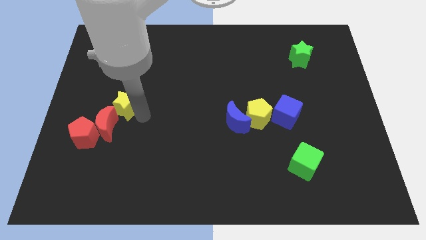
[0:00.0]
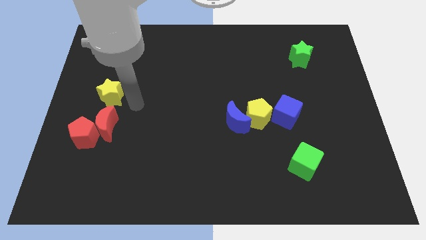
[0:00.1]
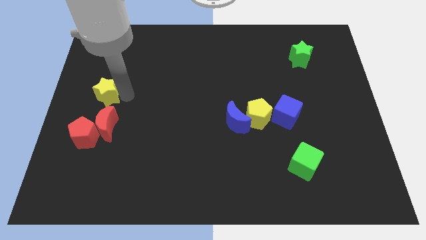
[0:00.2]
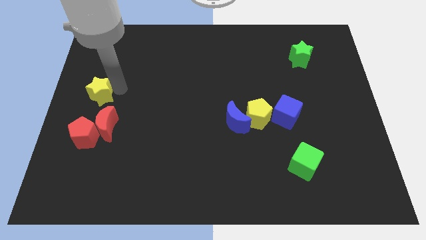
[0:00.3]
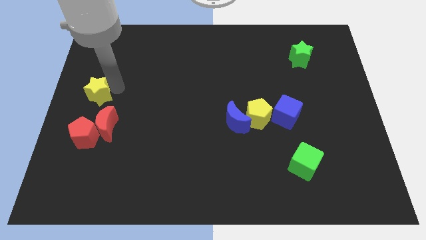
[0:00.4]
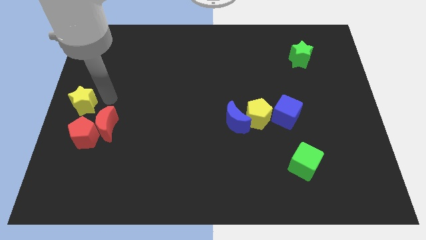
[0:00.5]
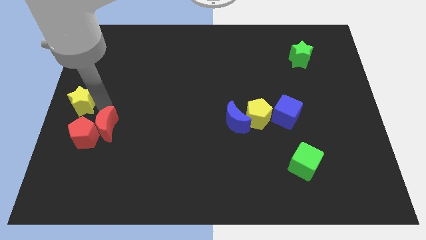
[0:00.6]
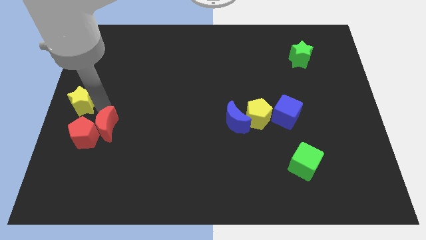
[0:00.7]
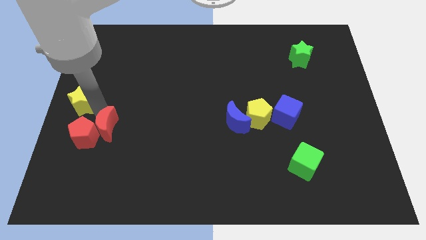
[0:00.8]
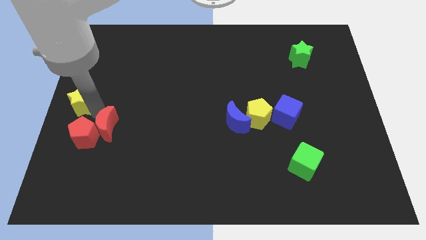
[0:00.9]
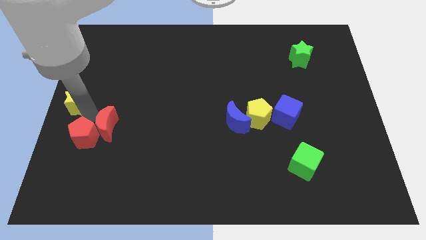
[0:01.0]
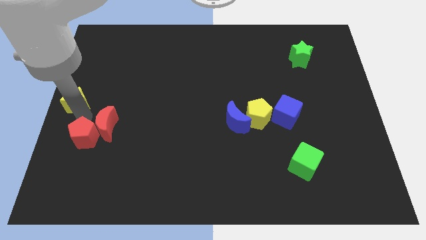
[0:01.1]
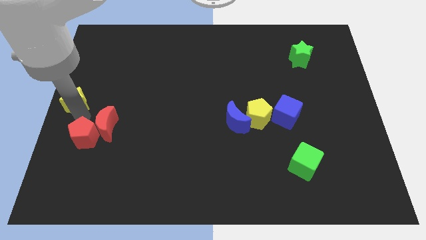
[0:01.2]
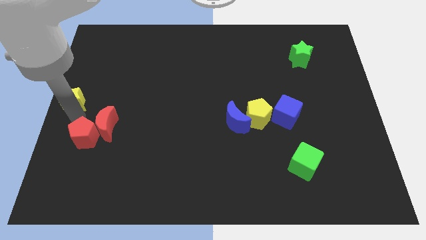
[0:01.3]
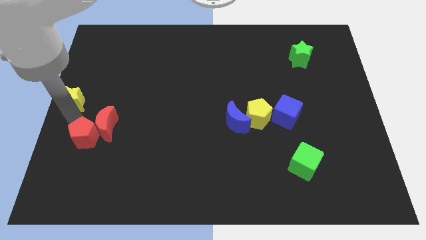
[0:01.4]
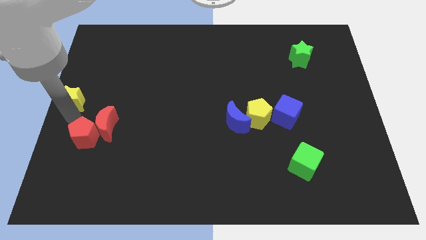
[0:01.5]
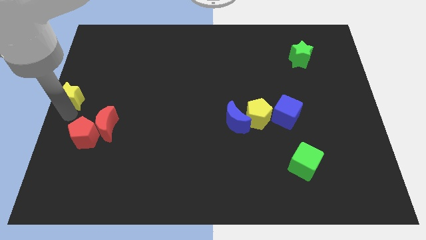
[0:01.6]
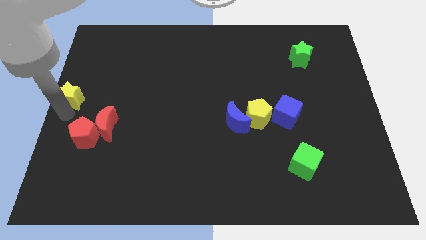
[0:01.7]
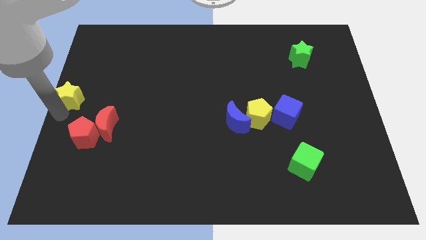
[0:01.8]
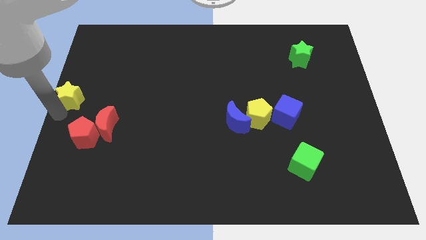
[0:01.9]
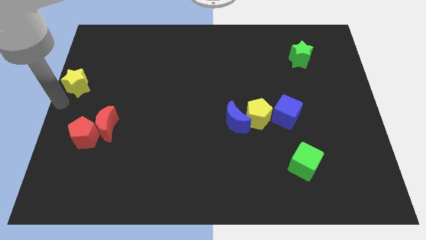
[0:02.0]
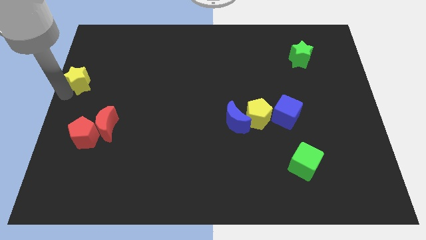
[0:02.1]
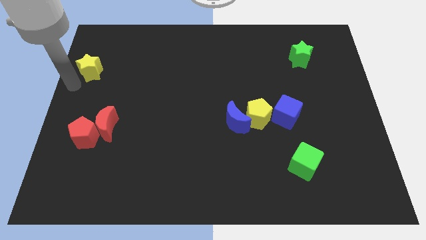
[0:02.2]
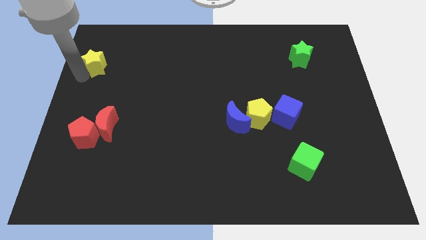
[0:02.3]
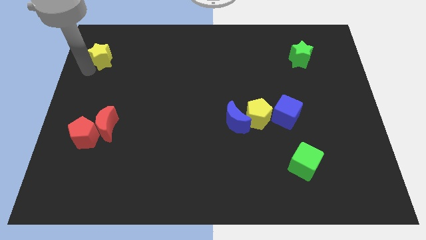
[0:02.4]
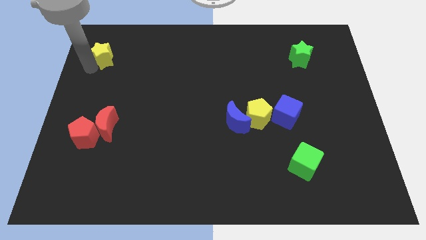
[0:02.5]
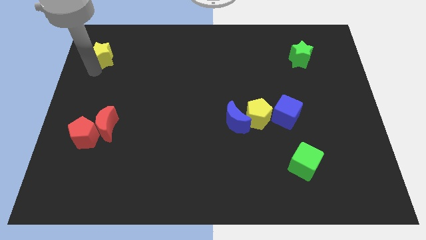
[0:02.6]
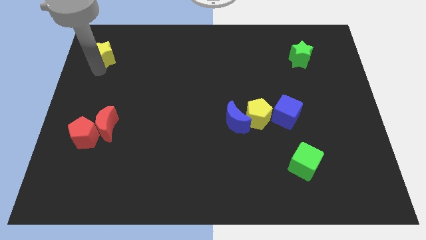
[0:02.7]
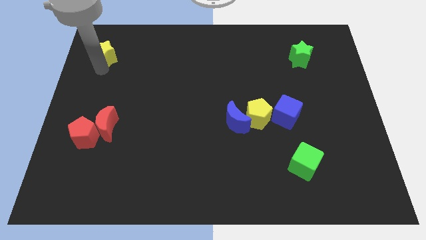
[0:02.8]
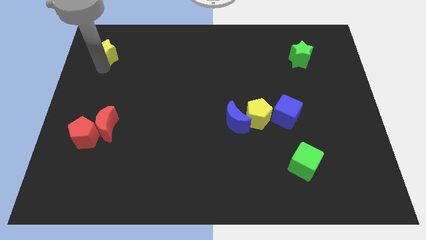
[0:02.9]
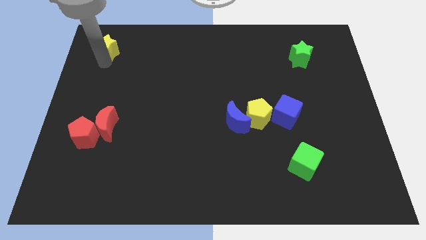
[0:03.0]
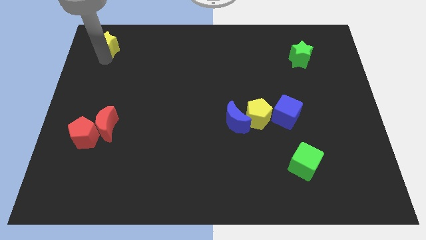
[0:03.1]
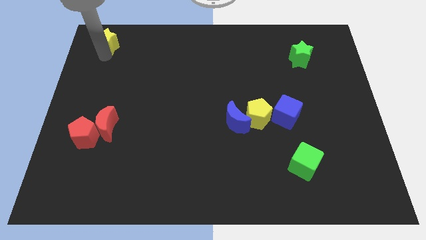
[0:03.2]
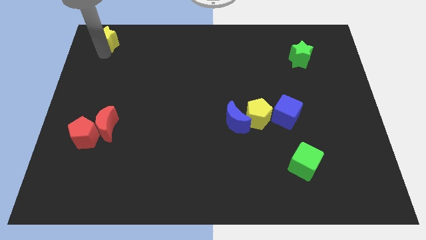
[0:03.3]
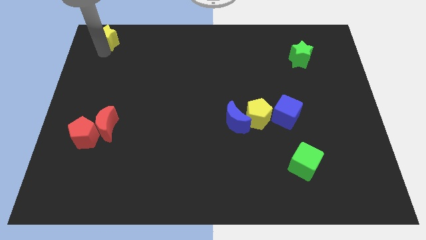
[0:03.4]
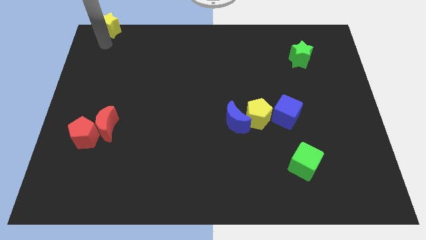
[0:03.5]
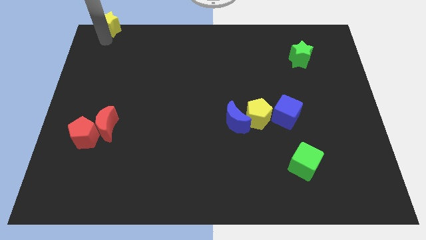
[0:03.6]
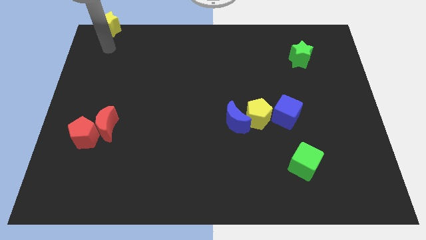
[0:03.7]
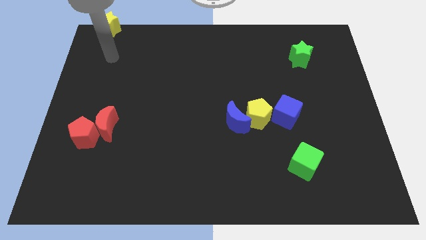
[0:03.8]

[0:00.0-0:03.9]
push the yellow star to the top of the board

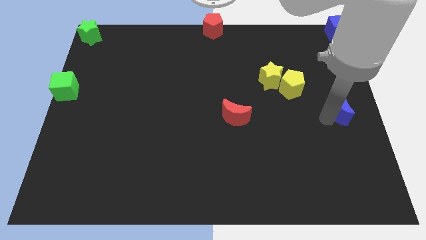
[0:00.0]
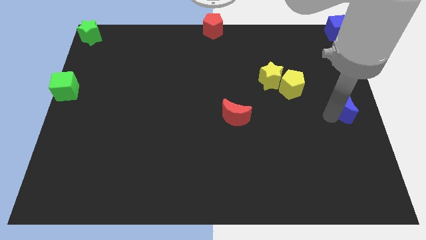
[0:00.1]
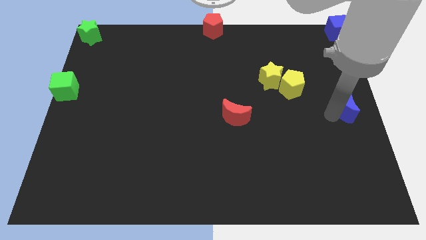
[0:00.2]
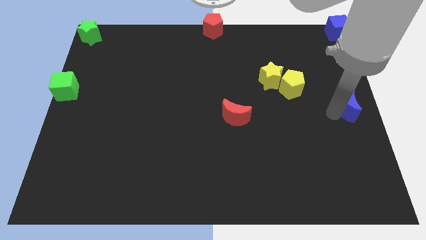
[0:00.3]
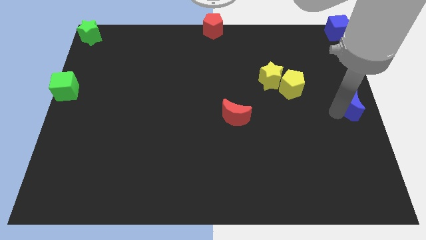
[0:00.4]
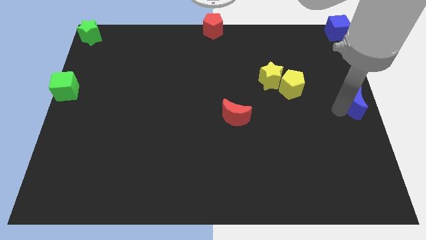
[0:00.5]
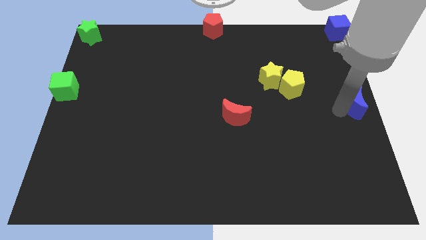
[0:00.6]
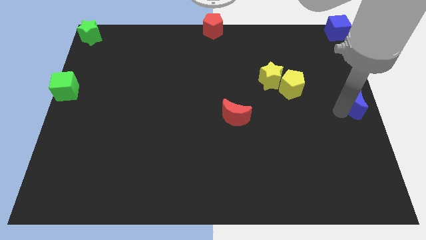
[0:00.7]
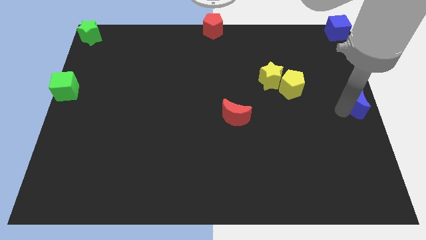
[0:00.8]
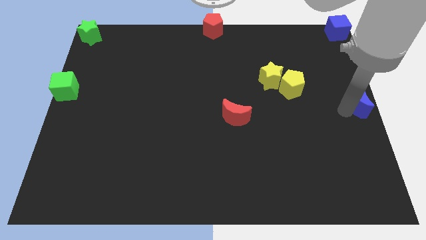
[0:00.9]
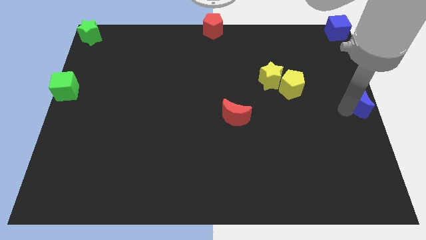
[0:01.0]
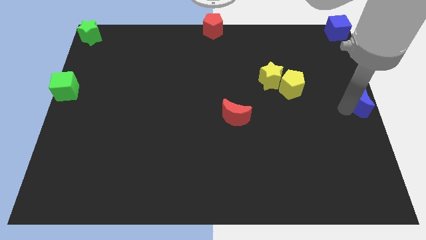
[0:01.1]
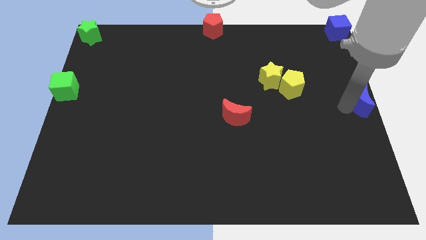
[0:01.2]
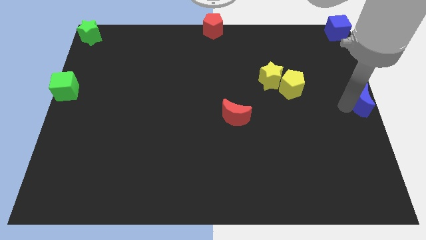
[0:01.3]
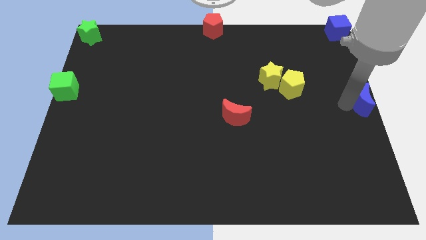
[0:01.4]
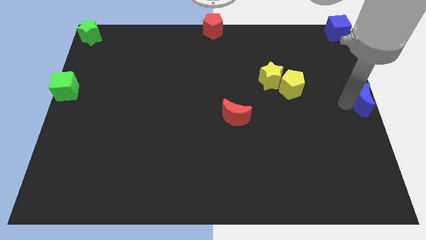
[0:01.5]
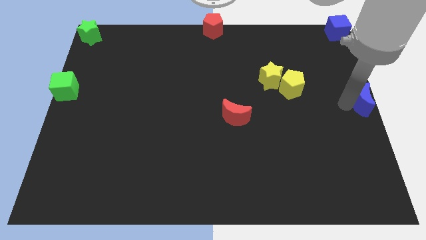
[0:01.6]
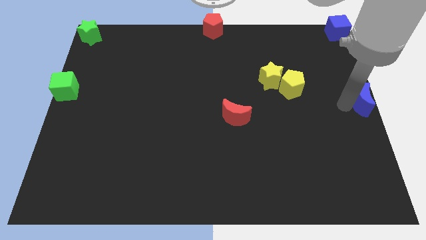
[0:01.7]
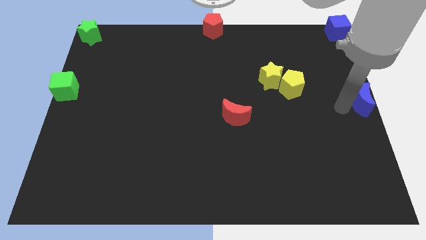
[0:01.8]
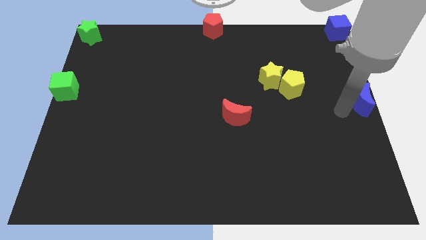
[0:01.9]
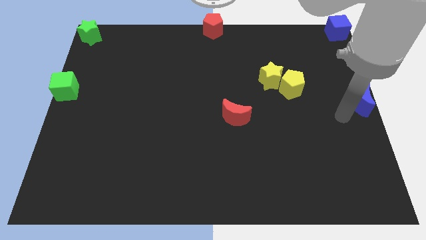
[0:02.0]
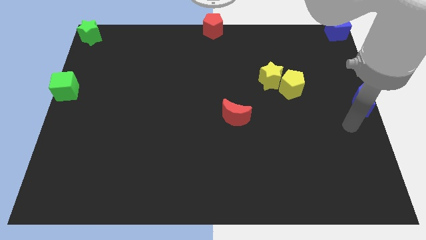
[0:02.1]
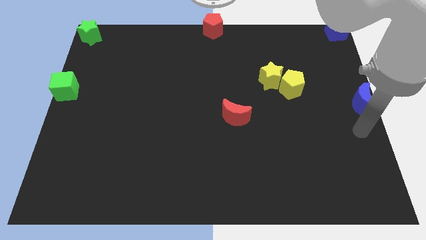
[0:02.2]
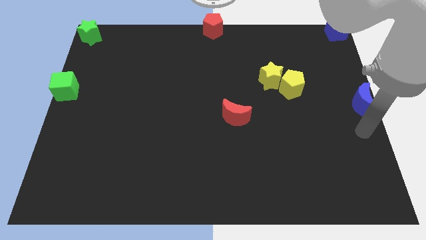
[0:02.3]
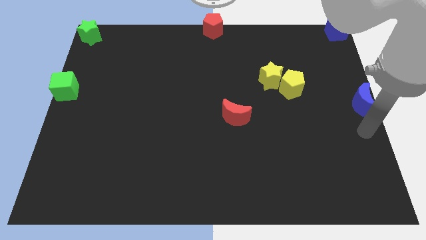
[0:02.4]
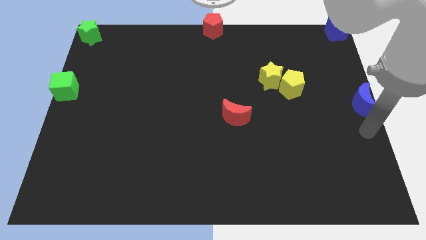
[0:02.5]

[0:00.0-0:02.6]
place the blue crescent below the blue cube

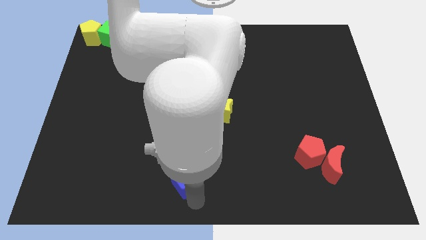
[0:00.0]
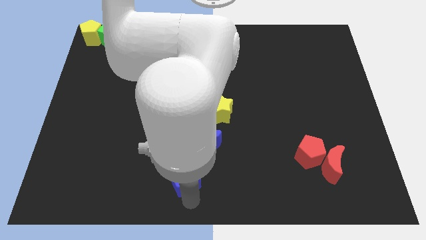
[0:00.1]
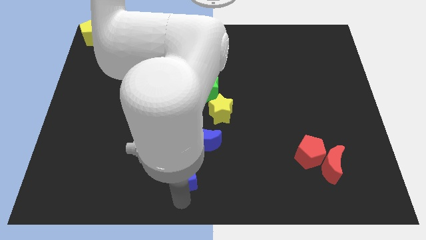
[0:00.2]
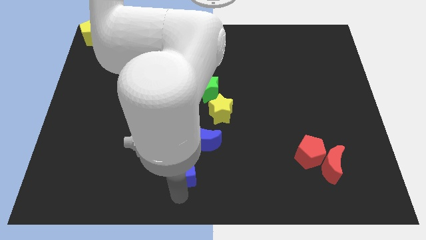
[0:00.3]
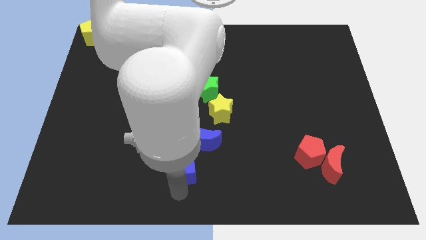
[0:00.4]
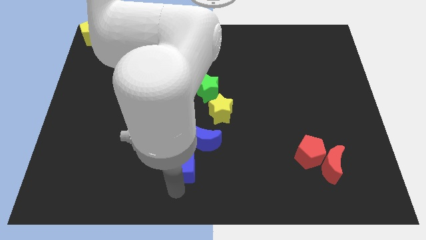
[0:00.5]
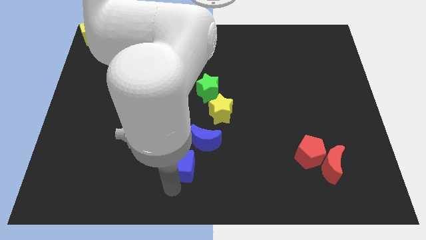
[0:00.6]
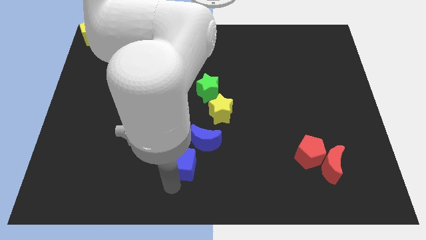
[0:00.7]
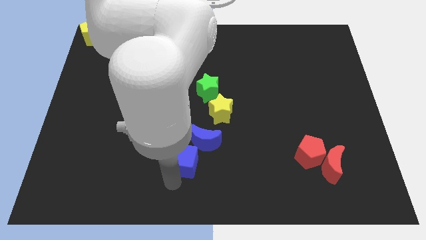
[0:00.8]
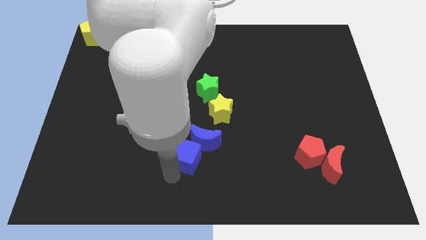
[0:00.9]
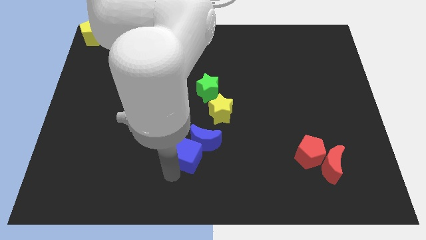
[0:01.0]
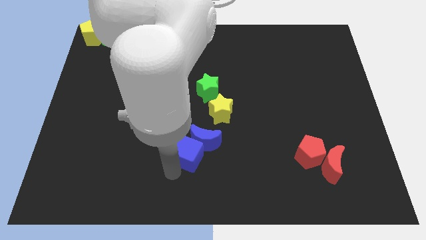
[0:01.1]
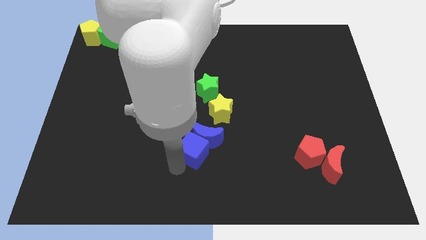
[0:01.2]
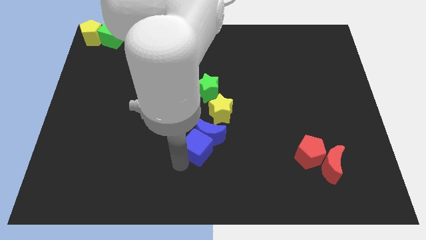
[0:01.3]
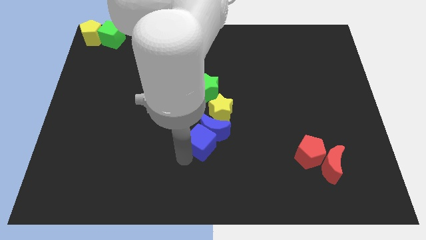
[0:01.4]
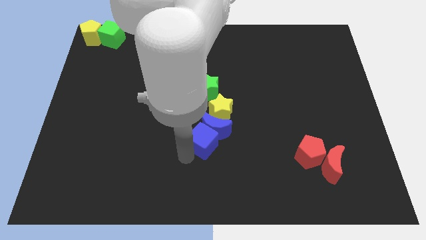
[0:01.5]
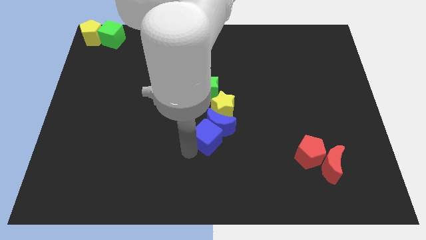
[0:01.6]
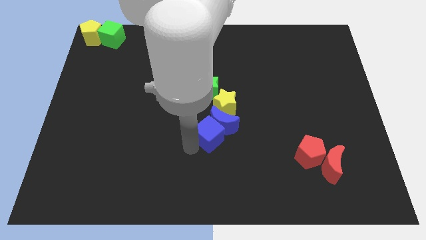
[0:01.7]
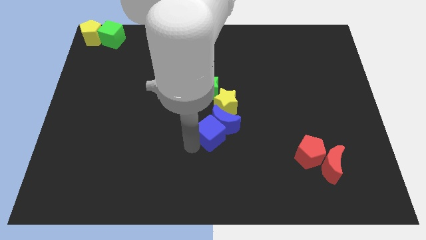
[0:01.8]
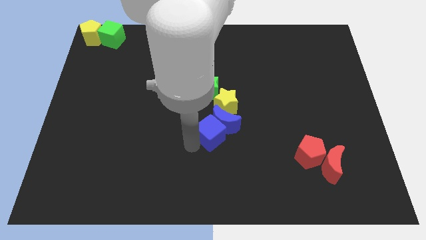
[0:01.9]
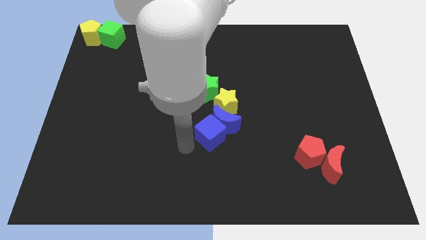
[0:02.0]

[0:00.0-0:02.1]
slide blue blocks into yellow star

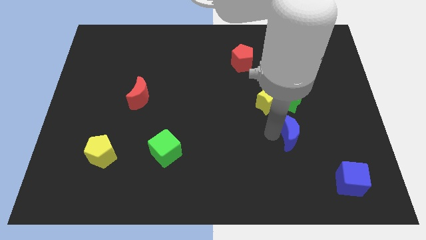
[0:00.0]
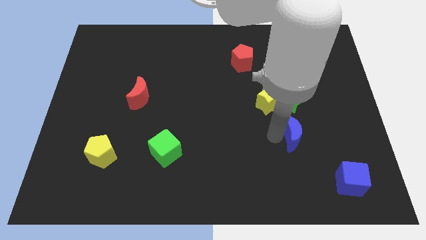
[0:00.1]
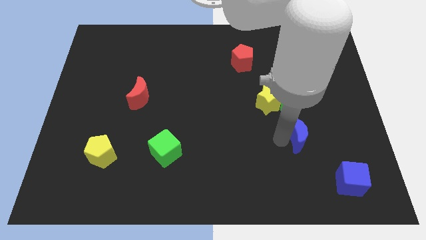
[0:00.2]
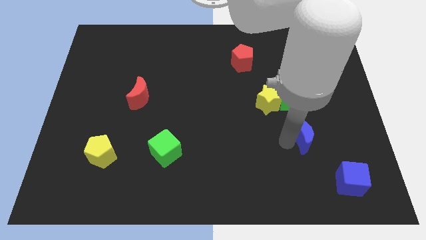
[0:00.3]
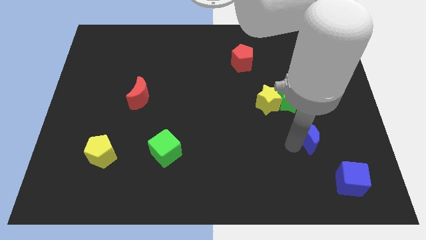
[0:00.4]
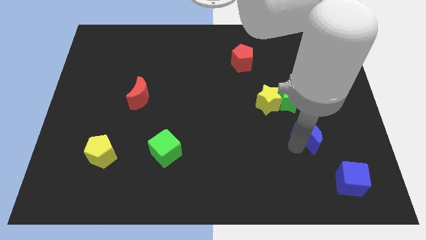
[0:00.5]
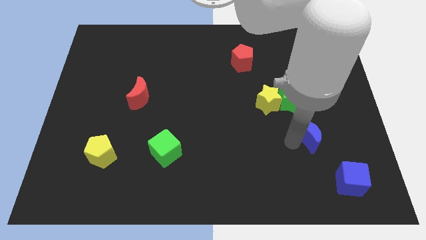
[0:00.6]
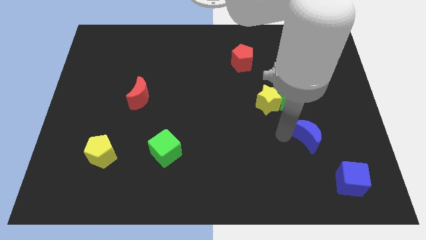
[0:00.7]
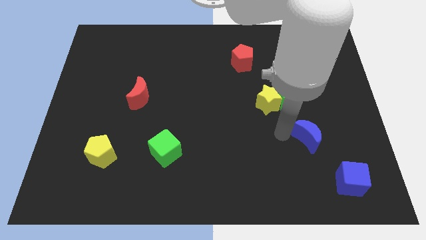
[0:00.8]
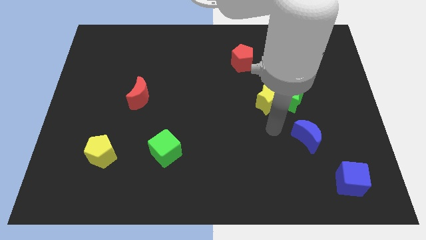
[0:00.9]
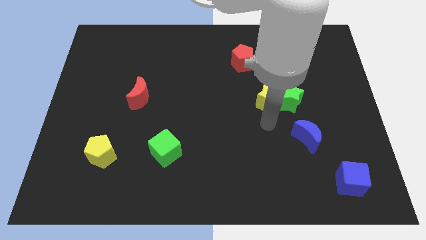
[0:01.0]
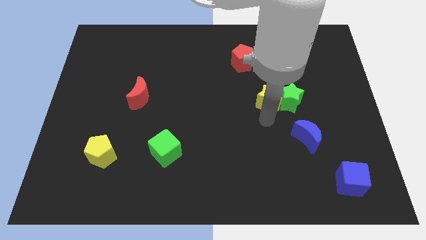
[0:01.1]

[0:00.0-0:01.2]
push the blue crescent slightly to the right
